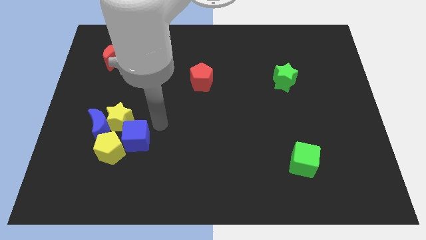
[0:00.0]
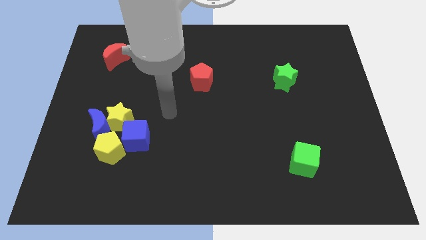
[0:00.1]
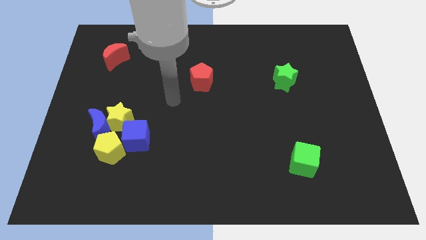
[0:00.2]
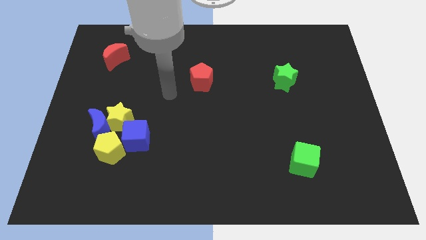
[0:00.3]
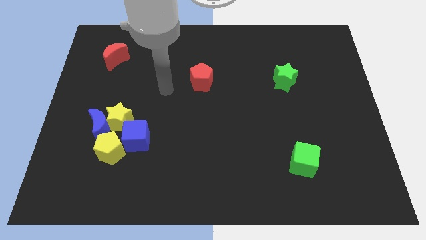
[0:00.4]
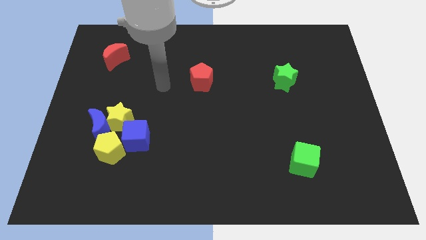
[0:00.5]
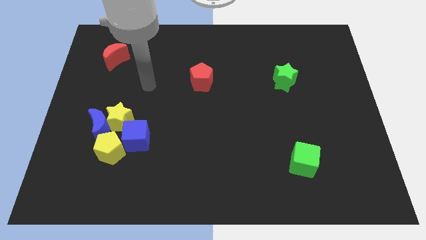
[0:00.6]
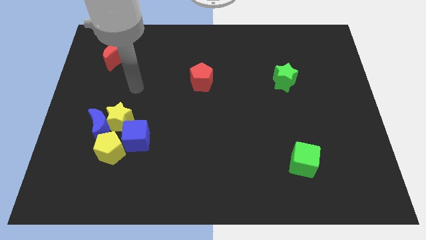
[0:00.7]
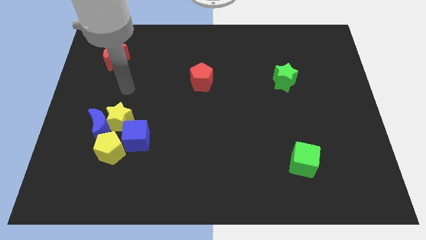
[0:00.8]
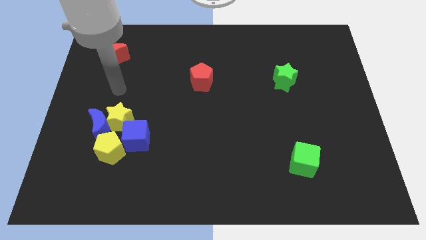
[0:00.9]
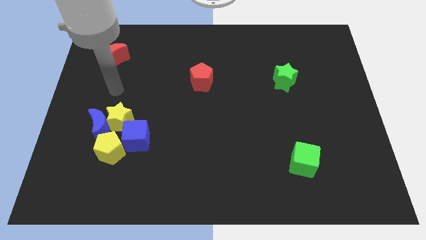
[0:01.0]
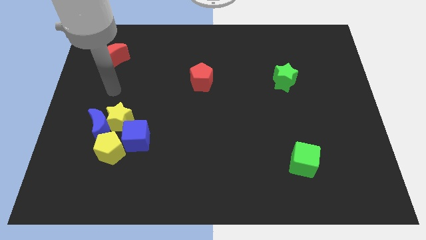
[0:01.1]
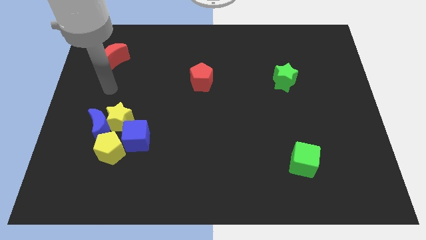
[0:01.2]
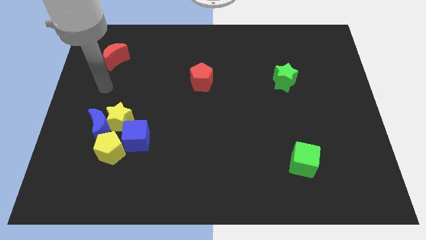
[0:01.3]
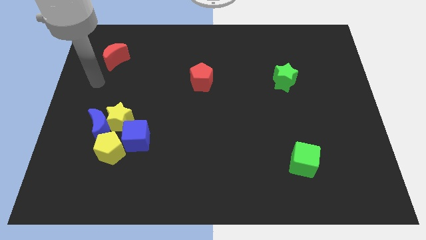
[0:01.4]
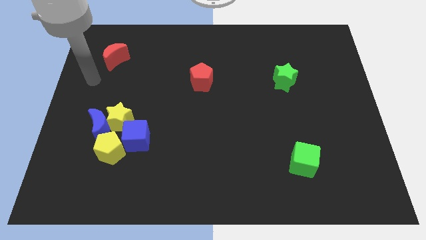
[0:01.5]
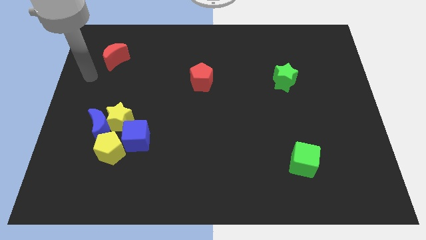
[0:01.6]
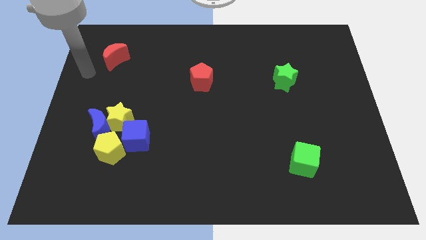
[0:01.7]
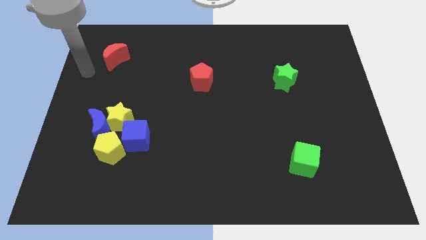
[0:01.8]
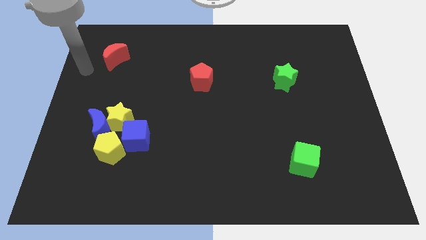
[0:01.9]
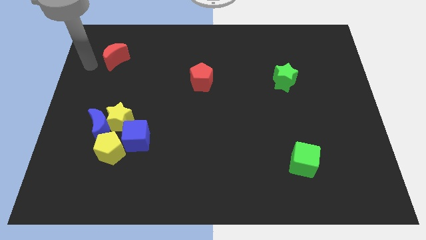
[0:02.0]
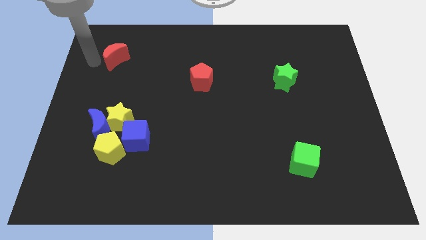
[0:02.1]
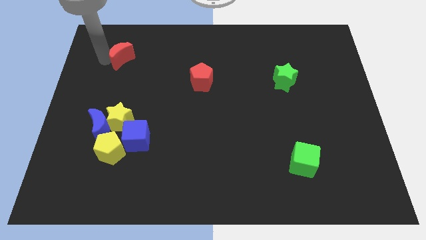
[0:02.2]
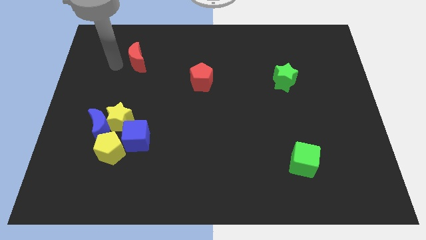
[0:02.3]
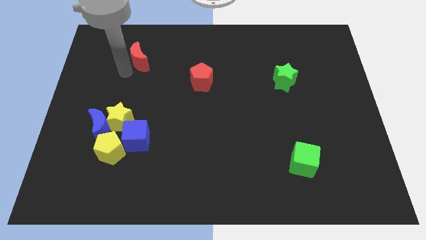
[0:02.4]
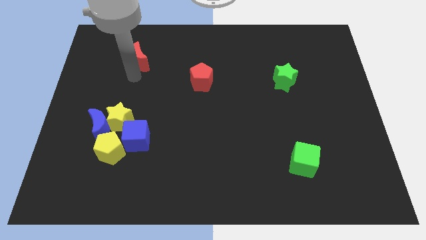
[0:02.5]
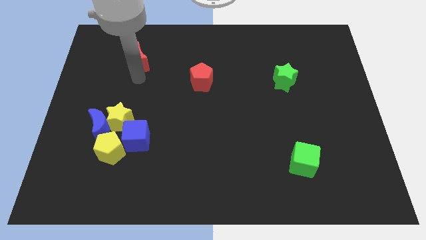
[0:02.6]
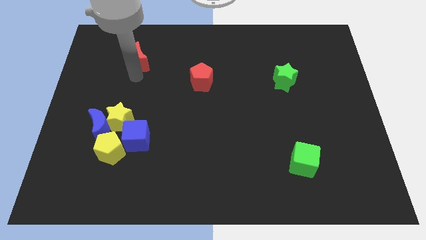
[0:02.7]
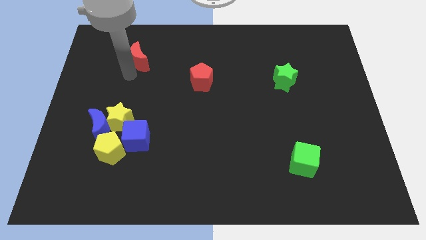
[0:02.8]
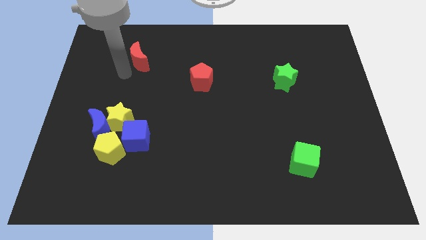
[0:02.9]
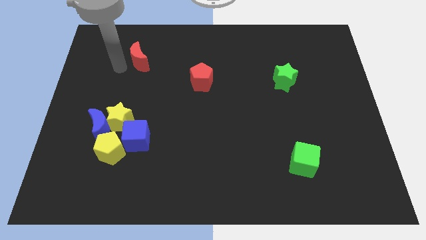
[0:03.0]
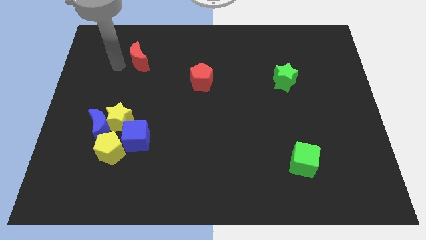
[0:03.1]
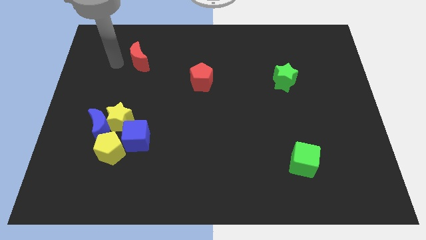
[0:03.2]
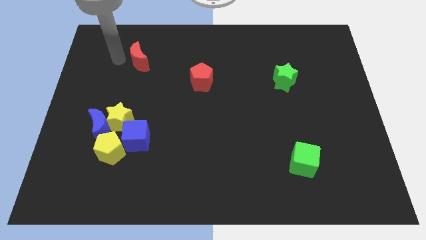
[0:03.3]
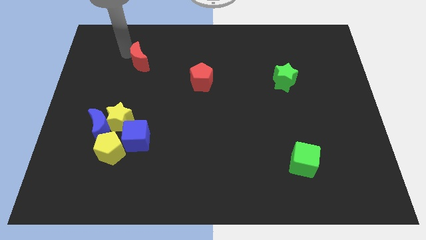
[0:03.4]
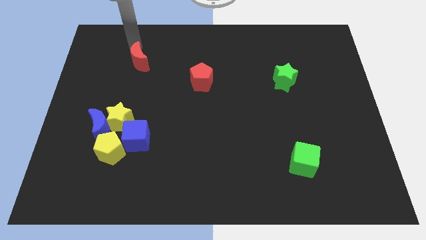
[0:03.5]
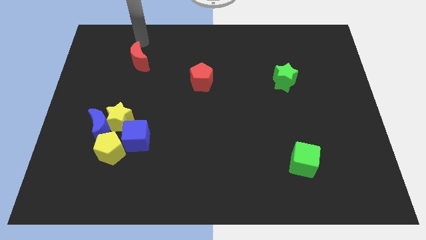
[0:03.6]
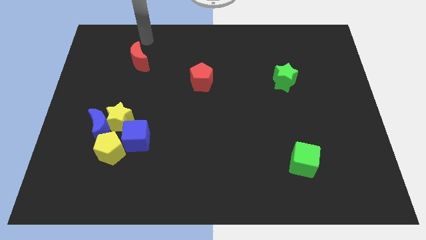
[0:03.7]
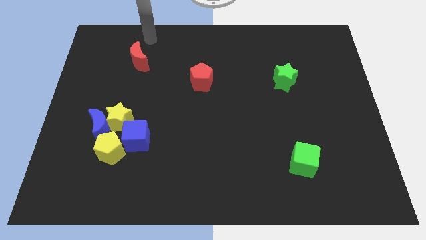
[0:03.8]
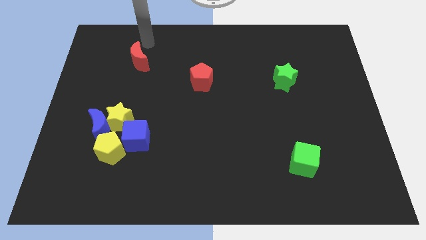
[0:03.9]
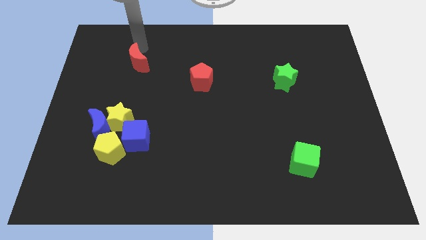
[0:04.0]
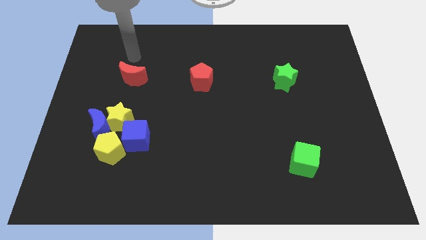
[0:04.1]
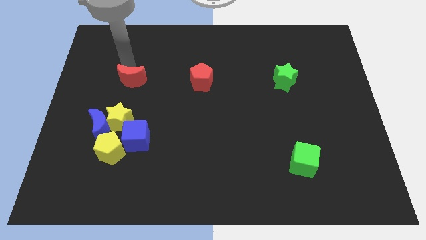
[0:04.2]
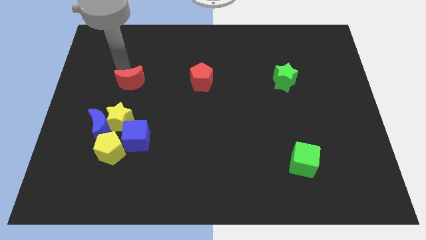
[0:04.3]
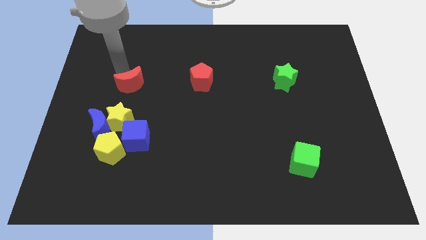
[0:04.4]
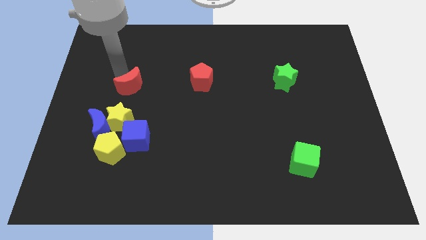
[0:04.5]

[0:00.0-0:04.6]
move the red crescent to the left of the red pentagon

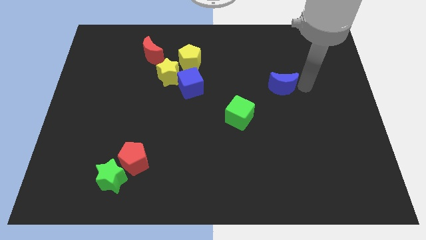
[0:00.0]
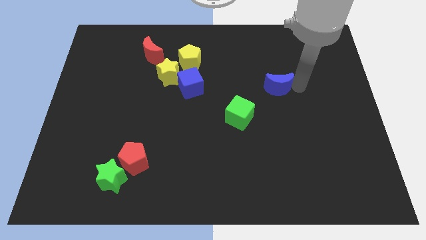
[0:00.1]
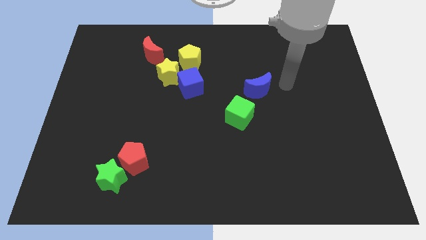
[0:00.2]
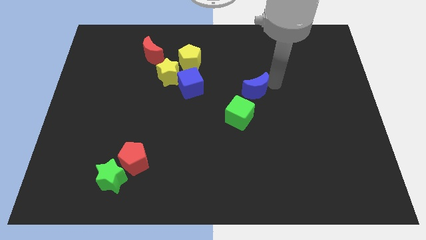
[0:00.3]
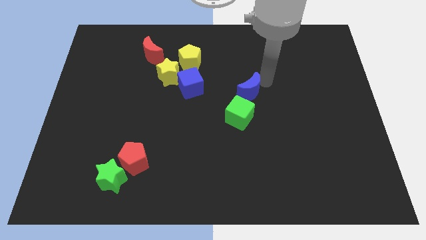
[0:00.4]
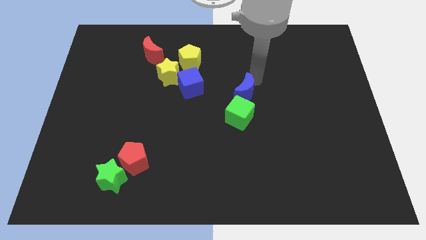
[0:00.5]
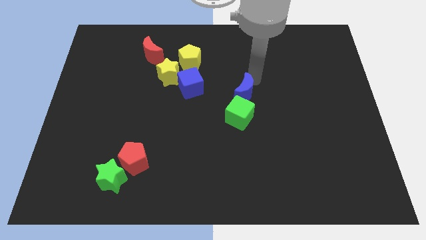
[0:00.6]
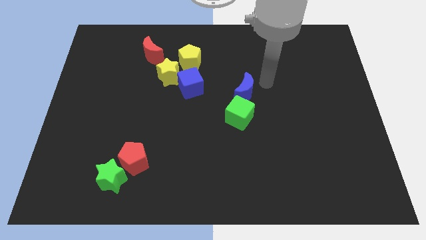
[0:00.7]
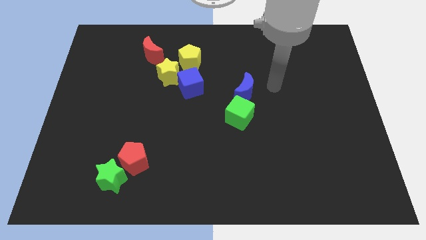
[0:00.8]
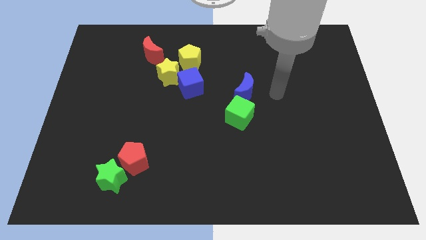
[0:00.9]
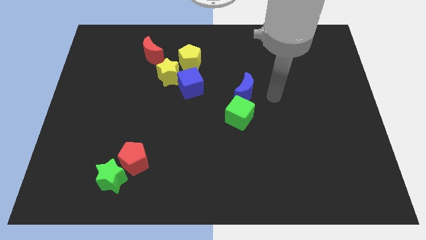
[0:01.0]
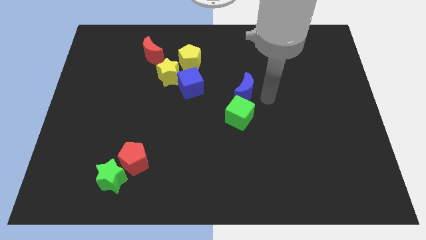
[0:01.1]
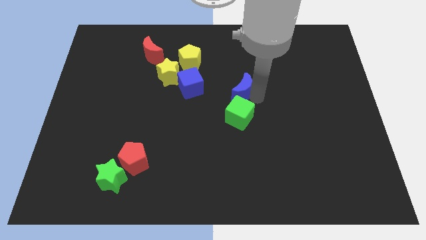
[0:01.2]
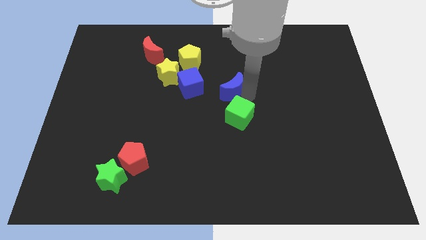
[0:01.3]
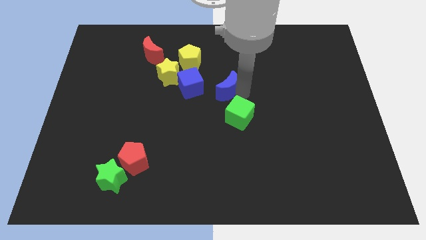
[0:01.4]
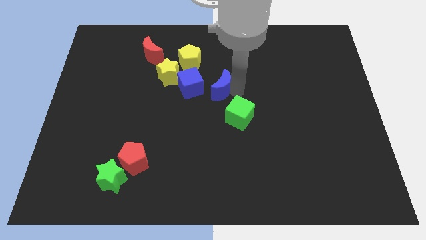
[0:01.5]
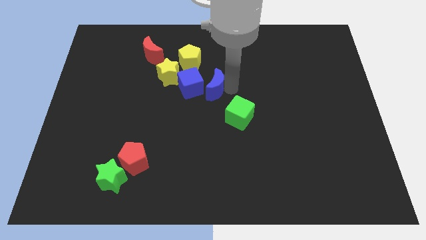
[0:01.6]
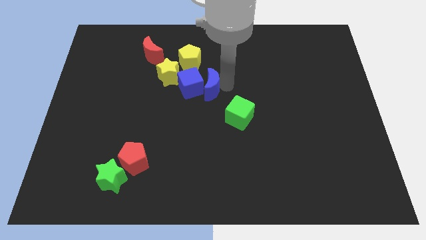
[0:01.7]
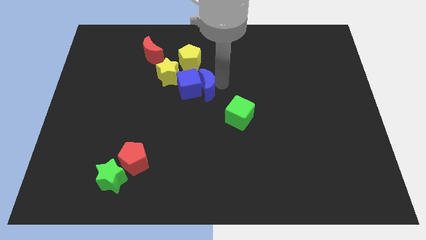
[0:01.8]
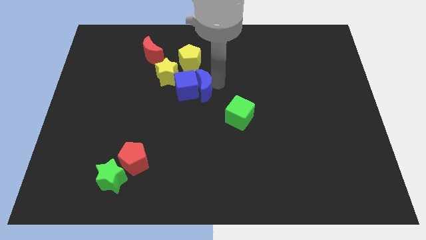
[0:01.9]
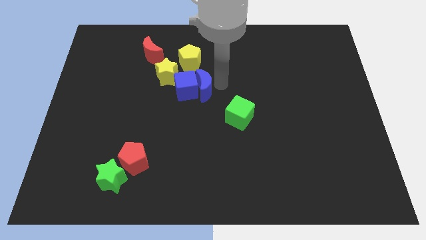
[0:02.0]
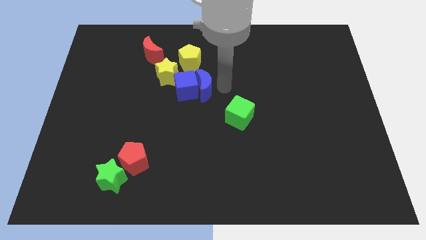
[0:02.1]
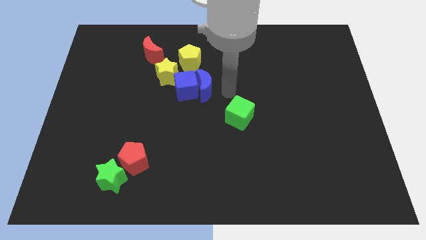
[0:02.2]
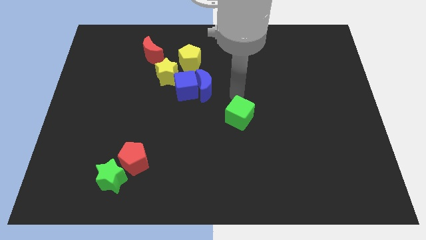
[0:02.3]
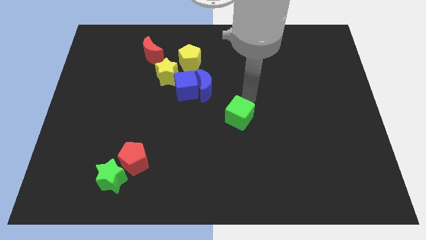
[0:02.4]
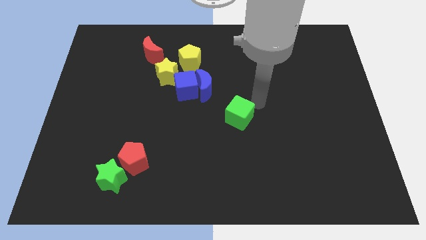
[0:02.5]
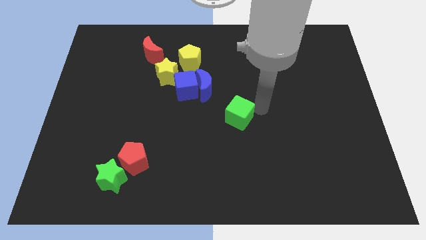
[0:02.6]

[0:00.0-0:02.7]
move the blue crescent into the blue cube

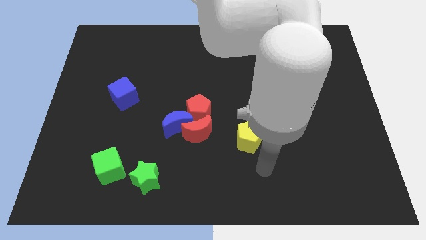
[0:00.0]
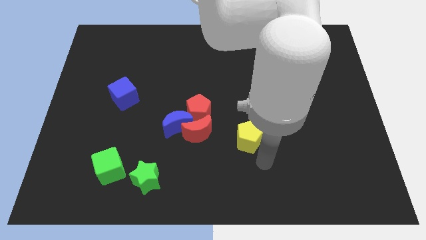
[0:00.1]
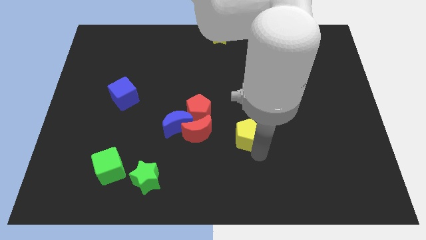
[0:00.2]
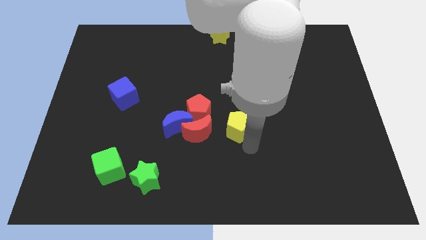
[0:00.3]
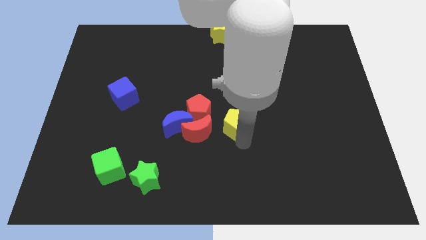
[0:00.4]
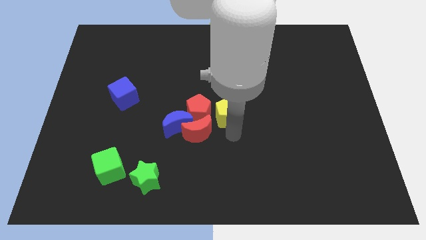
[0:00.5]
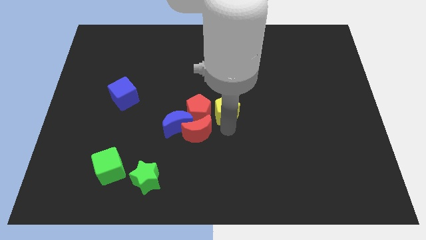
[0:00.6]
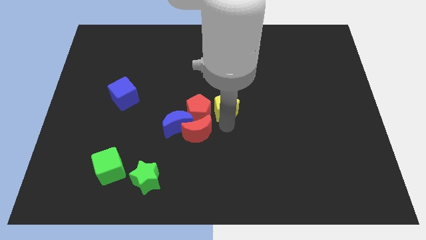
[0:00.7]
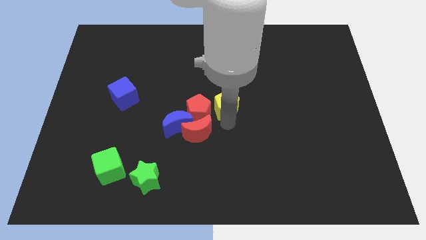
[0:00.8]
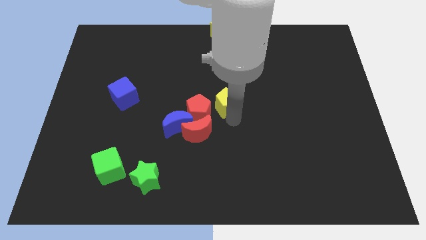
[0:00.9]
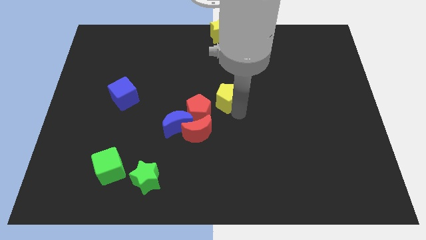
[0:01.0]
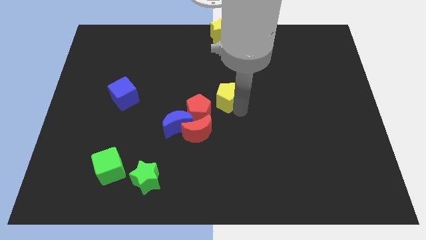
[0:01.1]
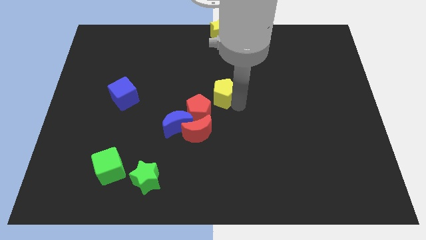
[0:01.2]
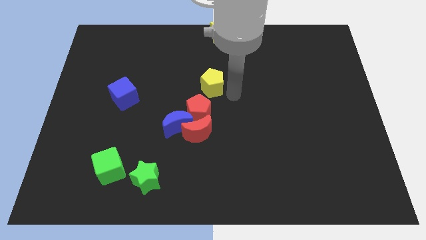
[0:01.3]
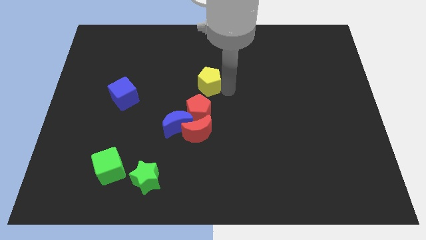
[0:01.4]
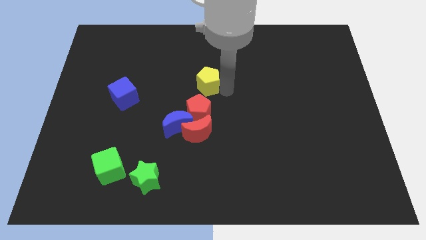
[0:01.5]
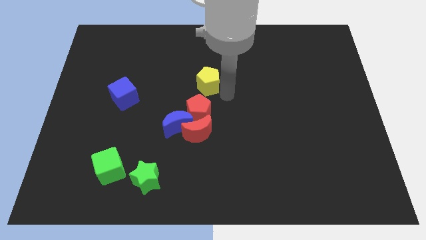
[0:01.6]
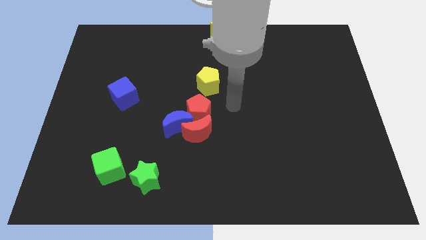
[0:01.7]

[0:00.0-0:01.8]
put the yellow pentagon at the top right of the red pentagon
